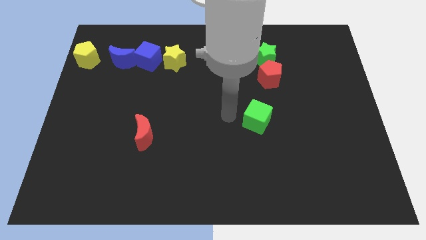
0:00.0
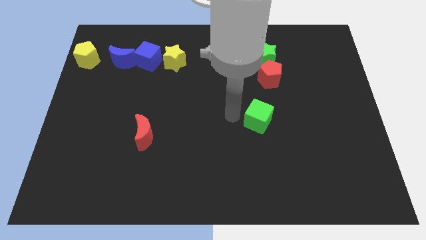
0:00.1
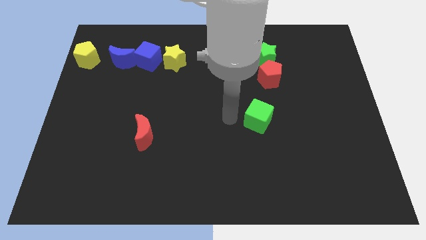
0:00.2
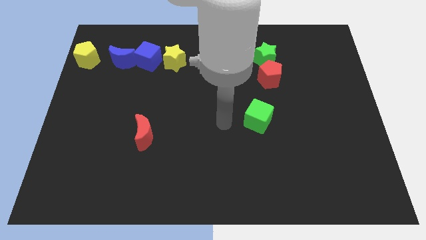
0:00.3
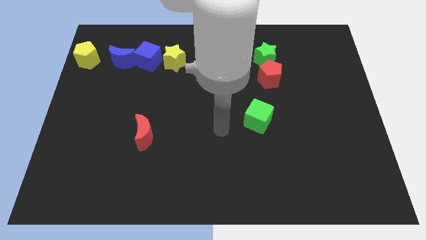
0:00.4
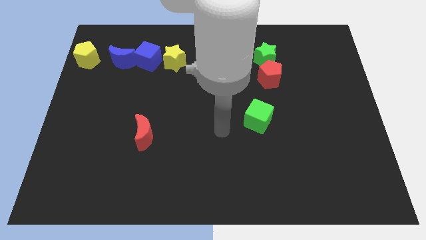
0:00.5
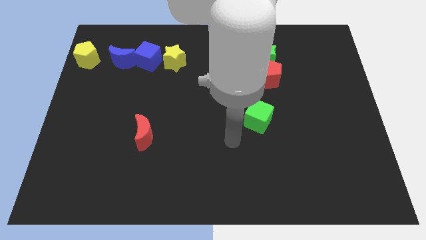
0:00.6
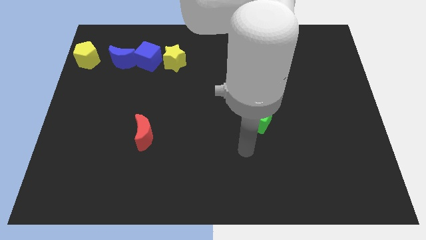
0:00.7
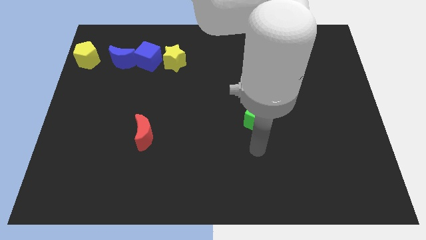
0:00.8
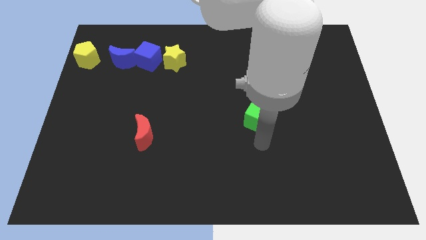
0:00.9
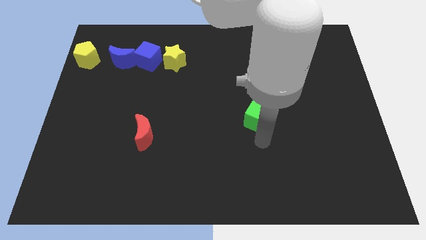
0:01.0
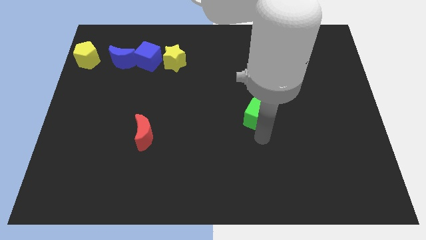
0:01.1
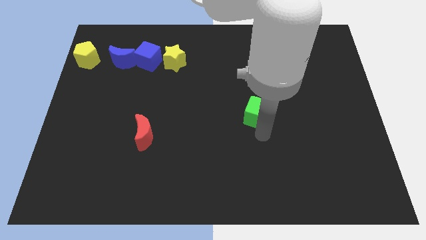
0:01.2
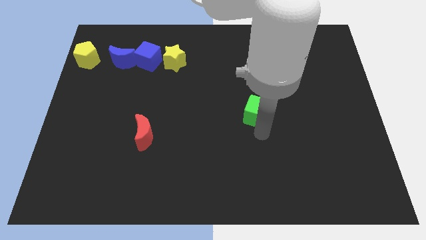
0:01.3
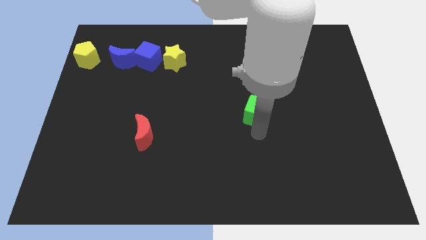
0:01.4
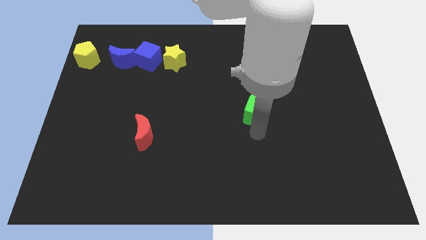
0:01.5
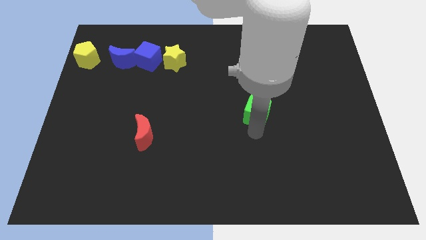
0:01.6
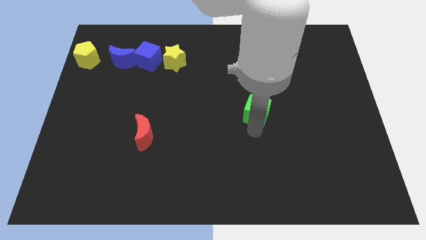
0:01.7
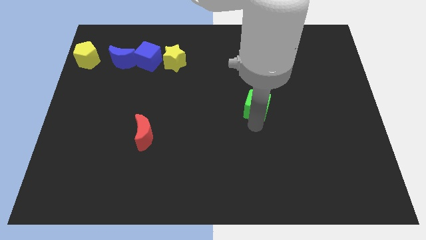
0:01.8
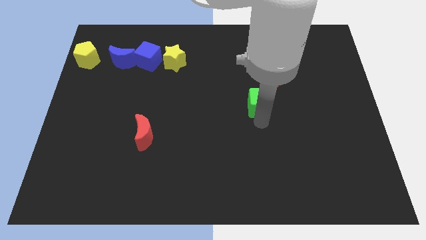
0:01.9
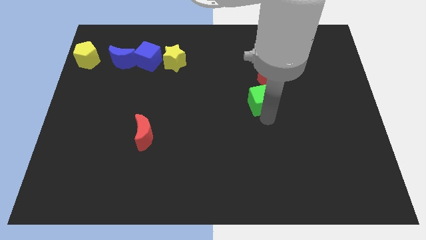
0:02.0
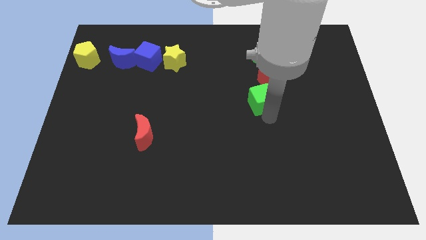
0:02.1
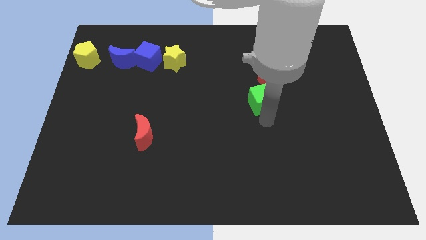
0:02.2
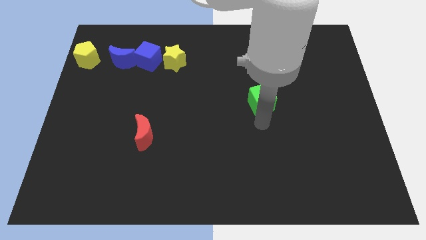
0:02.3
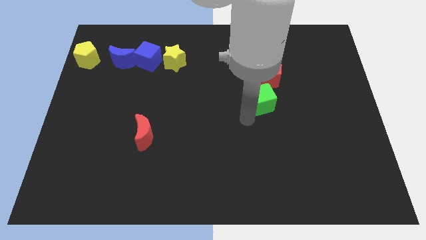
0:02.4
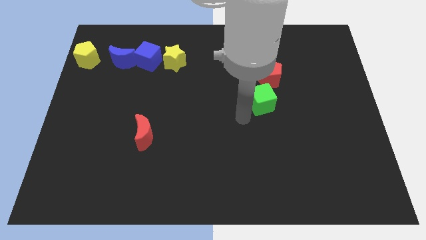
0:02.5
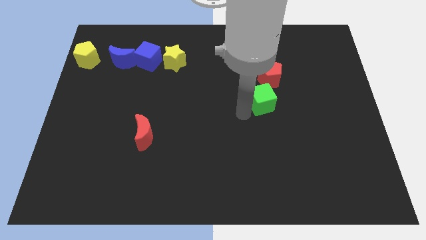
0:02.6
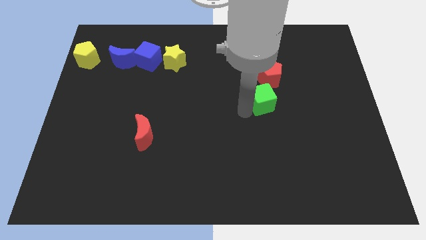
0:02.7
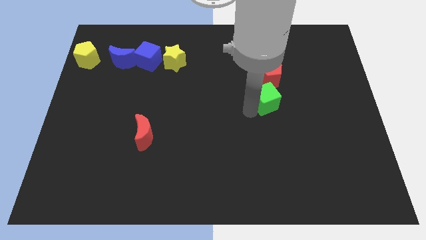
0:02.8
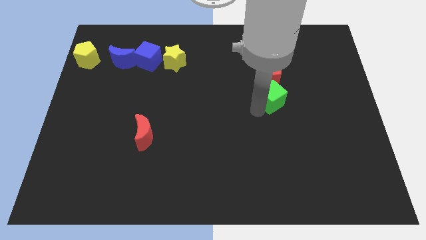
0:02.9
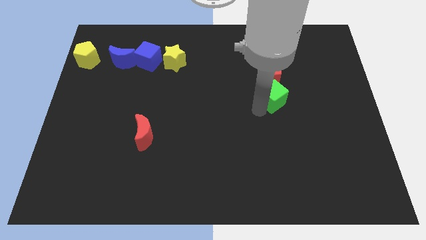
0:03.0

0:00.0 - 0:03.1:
place green cube below red pentagon

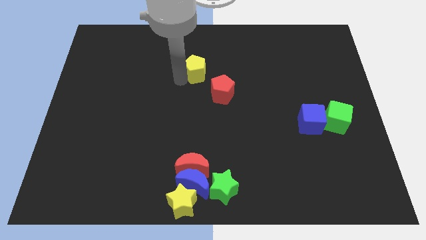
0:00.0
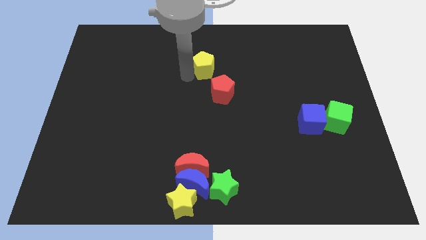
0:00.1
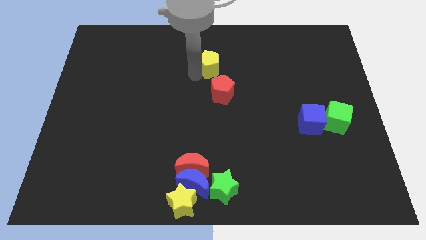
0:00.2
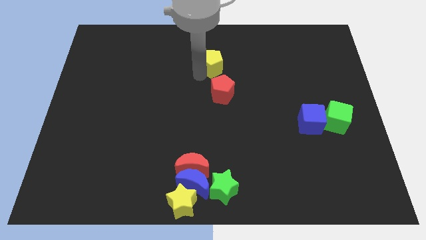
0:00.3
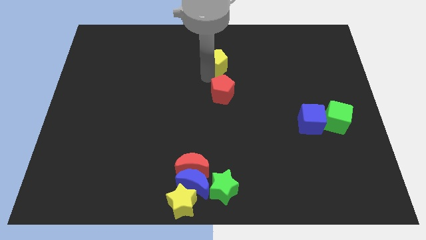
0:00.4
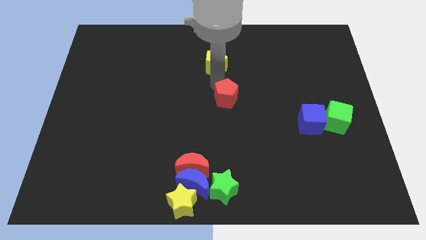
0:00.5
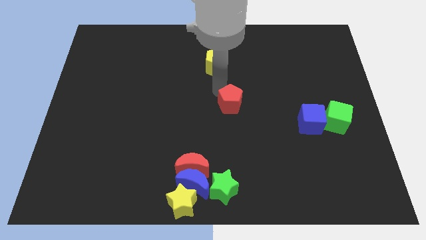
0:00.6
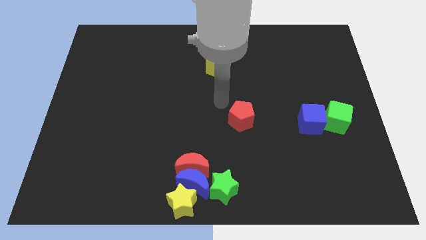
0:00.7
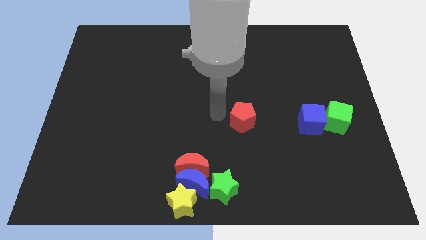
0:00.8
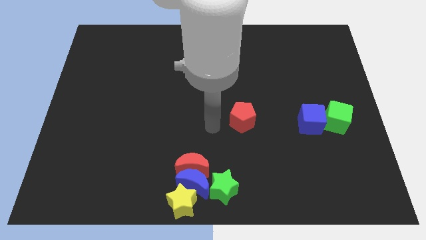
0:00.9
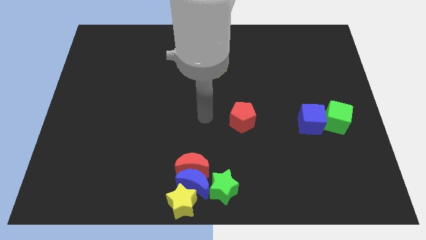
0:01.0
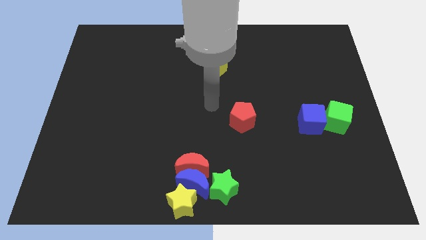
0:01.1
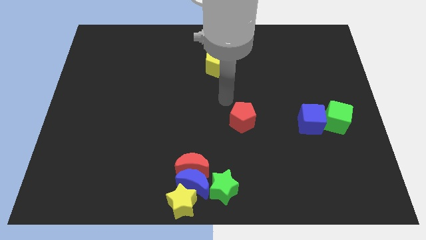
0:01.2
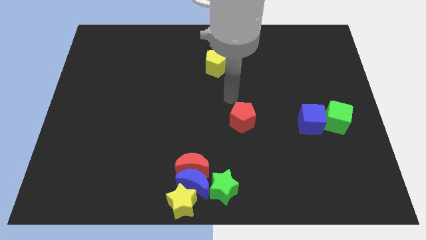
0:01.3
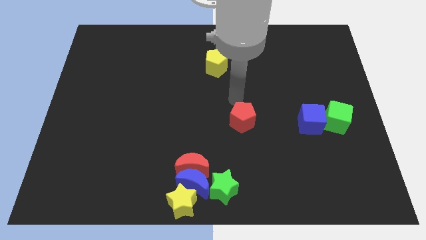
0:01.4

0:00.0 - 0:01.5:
push the red pentagon diagonal to the left of the blue cube

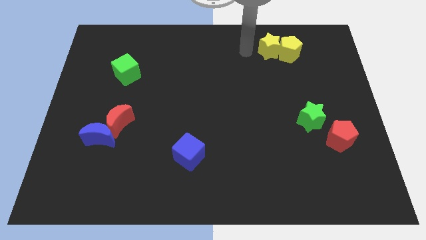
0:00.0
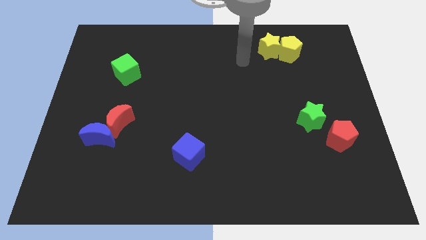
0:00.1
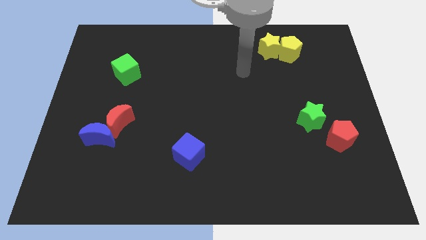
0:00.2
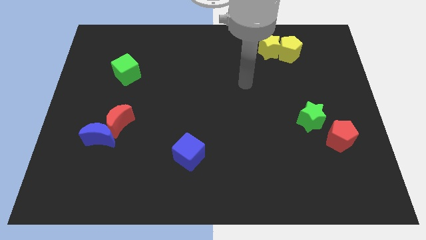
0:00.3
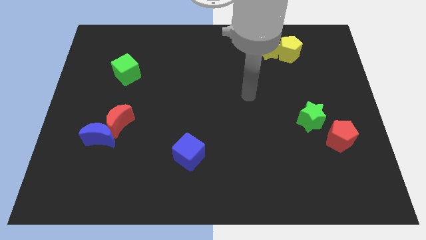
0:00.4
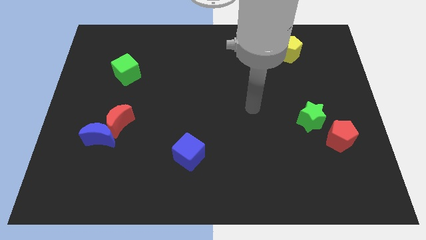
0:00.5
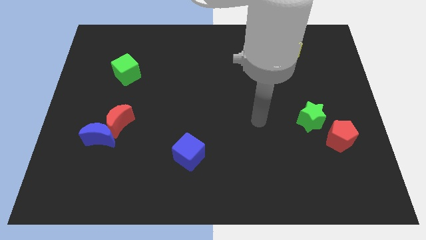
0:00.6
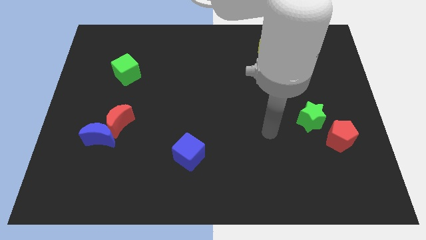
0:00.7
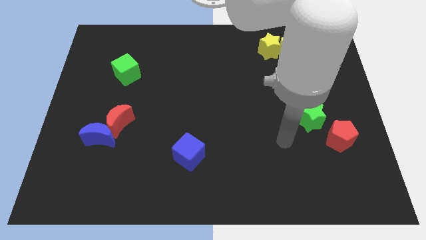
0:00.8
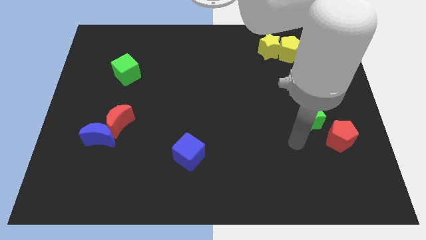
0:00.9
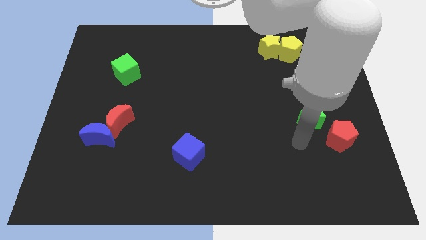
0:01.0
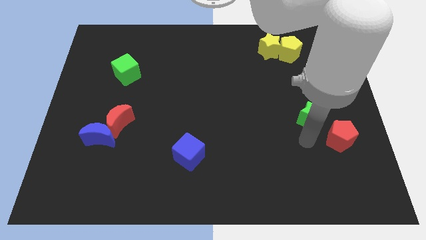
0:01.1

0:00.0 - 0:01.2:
point the arm at the bottom side of the green star

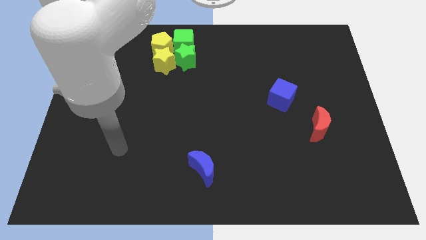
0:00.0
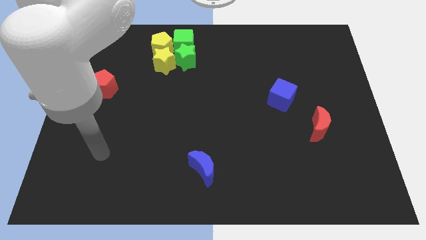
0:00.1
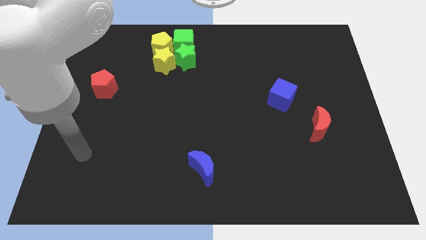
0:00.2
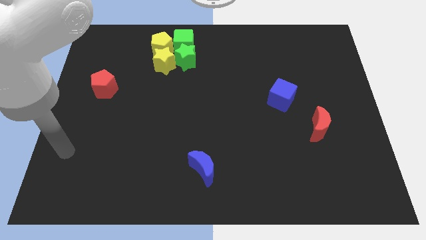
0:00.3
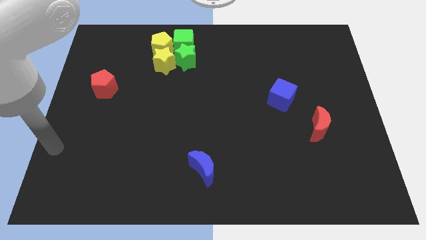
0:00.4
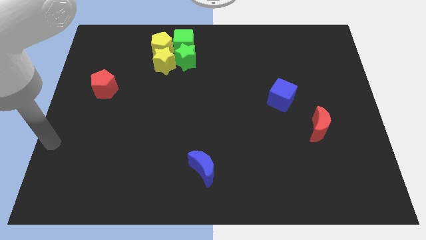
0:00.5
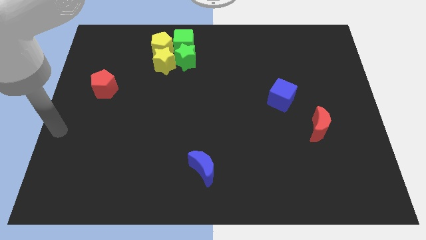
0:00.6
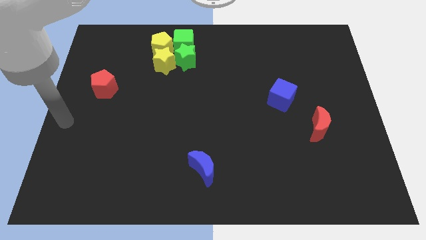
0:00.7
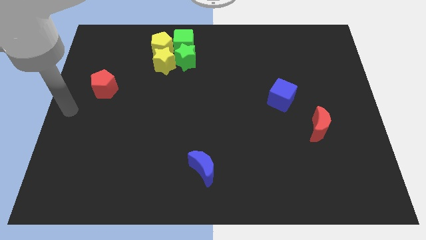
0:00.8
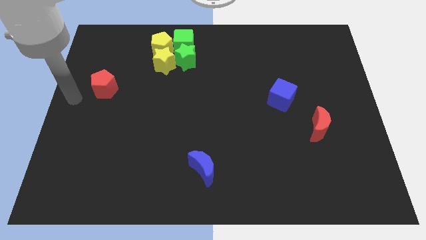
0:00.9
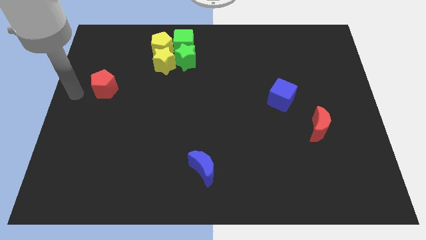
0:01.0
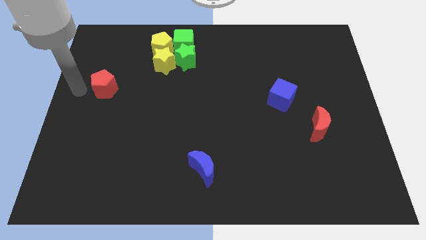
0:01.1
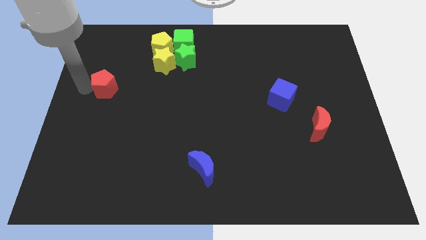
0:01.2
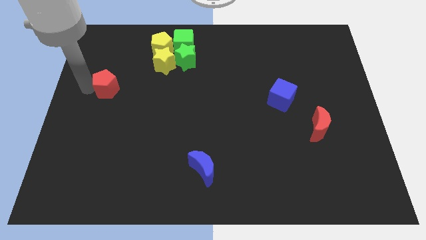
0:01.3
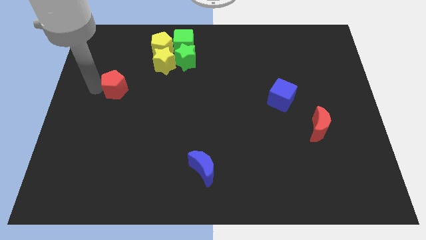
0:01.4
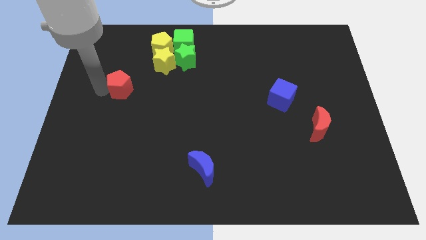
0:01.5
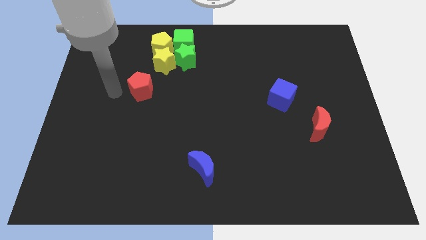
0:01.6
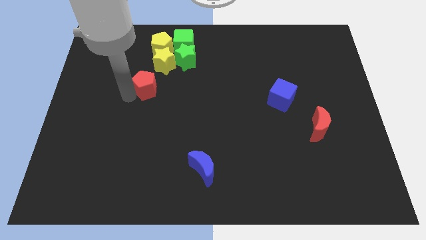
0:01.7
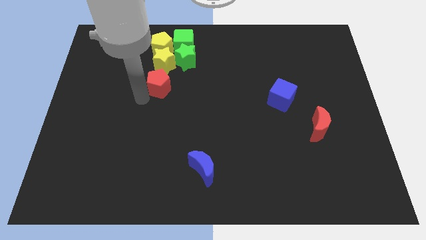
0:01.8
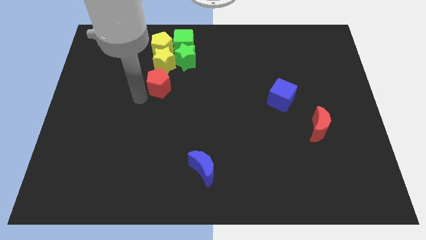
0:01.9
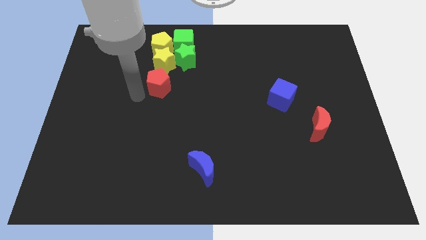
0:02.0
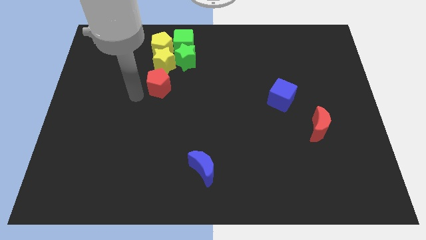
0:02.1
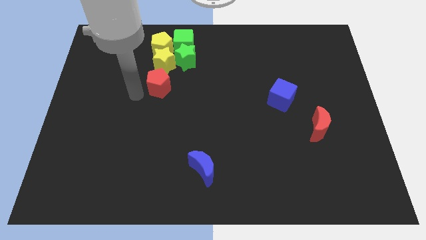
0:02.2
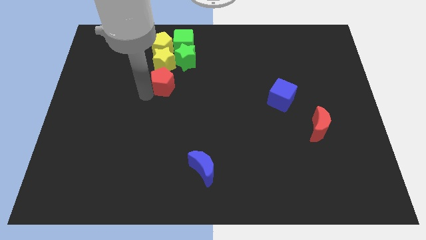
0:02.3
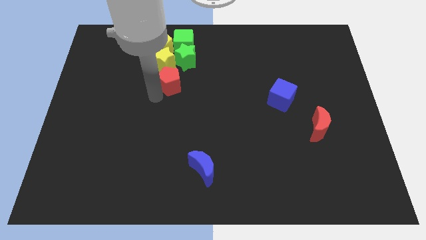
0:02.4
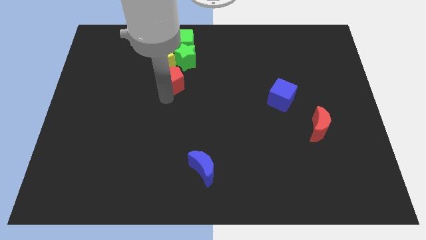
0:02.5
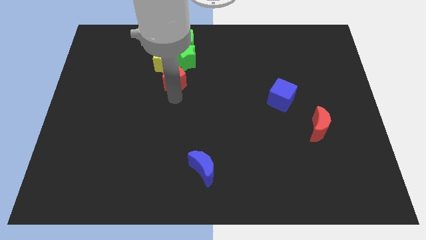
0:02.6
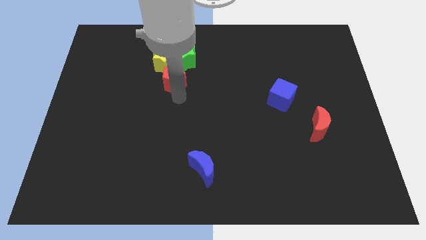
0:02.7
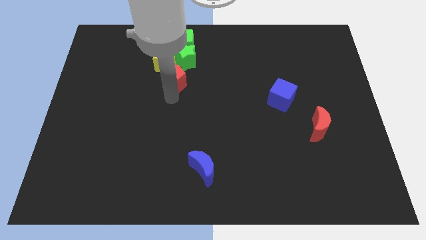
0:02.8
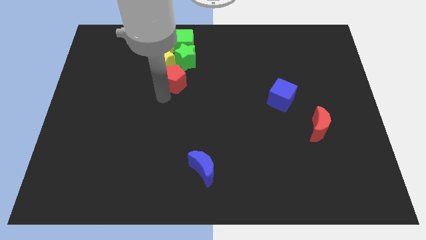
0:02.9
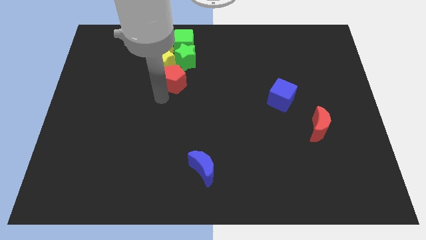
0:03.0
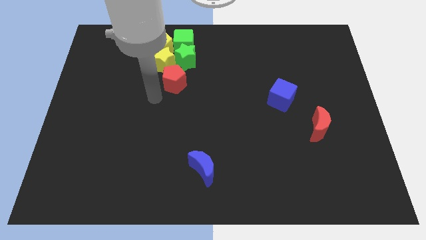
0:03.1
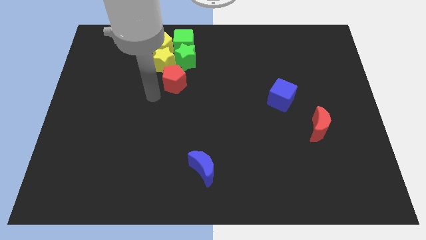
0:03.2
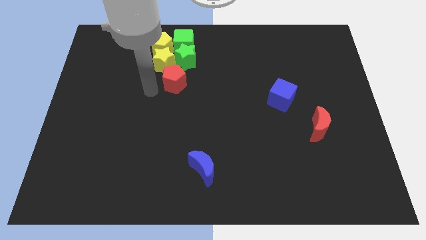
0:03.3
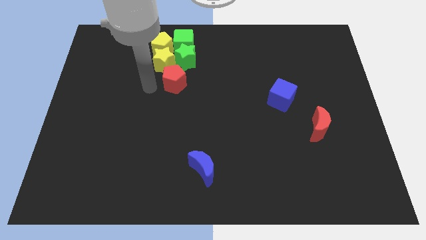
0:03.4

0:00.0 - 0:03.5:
place red pentagon below the stars
